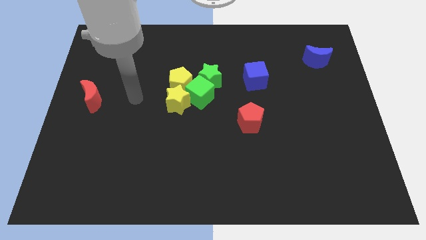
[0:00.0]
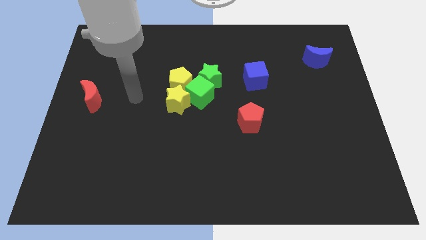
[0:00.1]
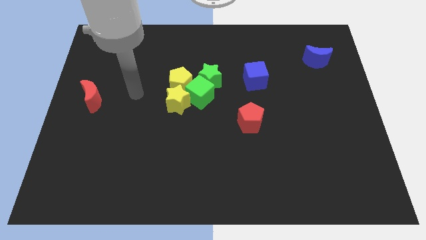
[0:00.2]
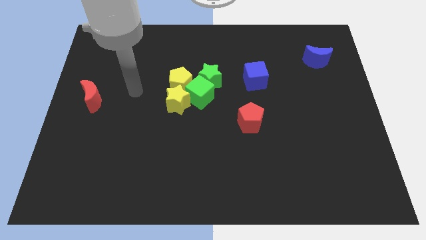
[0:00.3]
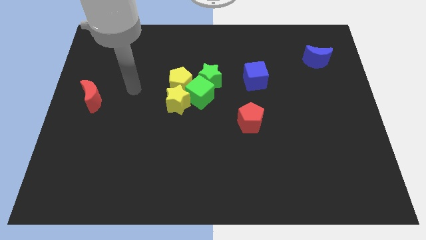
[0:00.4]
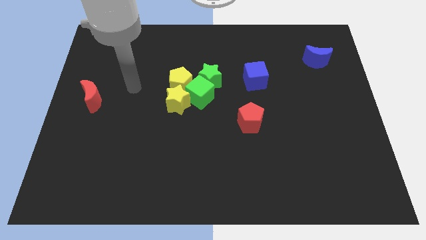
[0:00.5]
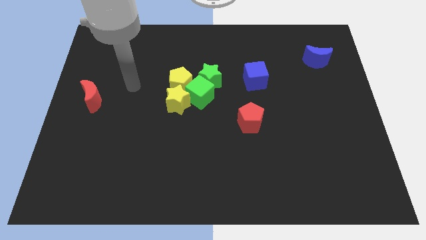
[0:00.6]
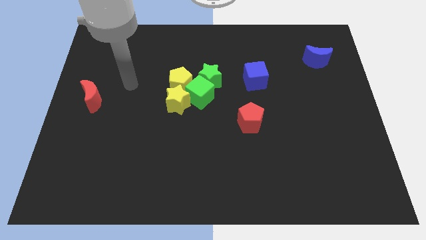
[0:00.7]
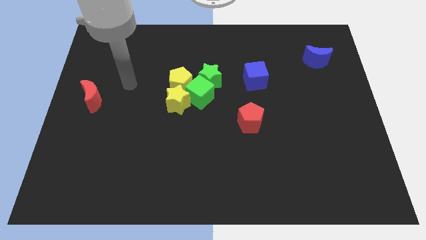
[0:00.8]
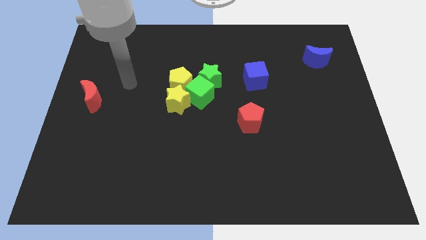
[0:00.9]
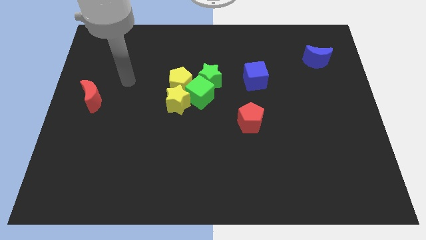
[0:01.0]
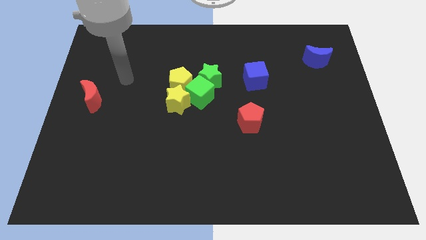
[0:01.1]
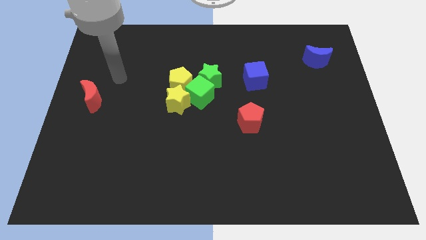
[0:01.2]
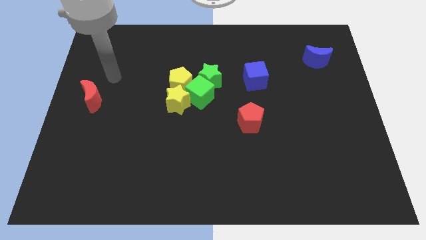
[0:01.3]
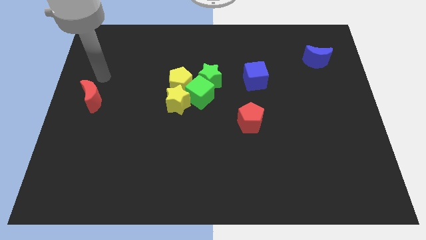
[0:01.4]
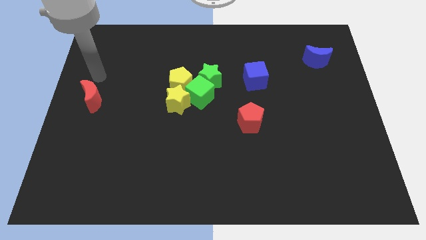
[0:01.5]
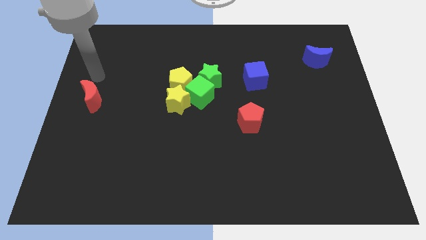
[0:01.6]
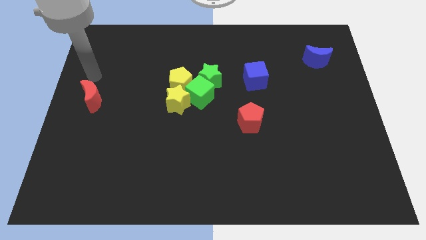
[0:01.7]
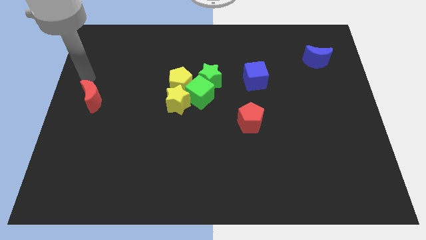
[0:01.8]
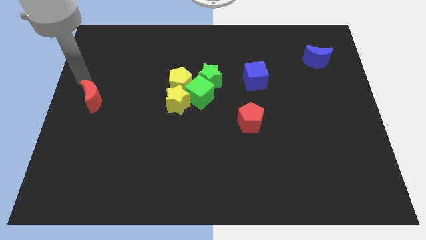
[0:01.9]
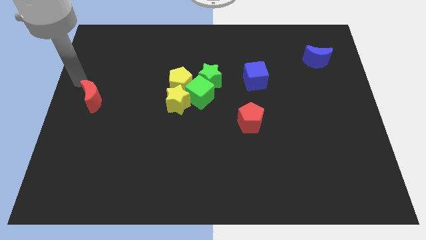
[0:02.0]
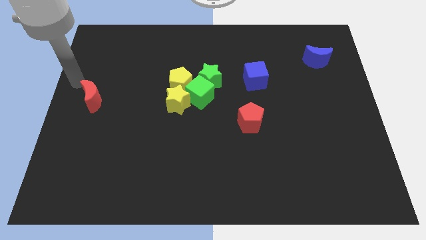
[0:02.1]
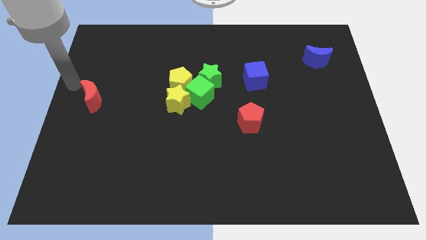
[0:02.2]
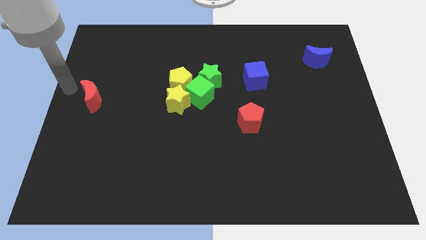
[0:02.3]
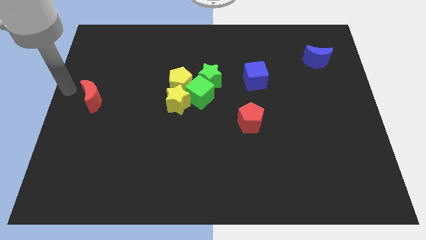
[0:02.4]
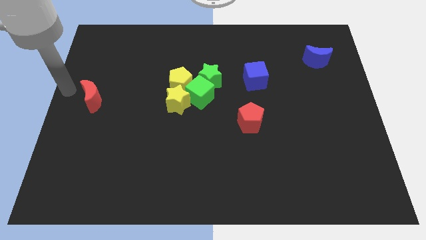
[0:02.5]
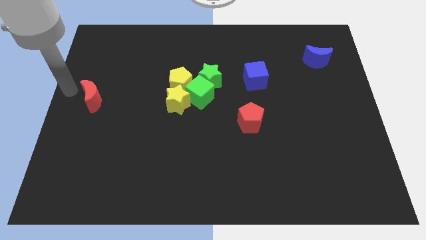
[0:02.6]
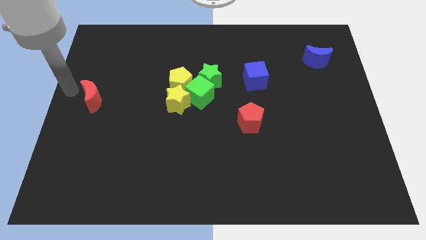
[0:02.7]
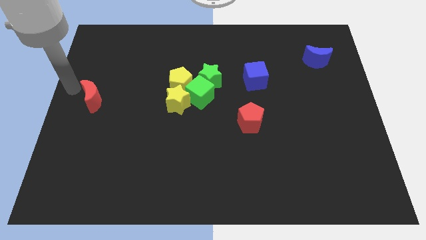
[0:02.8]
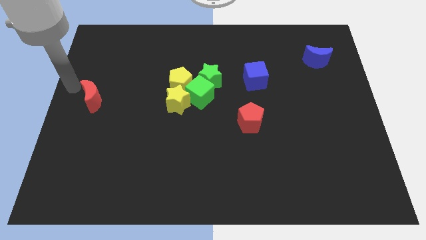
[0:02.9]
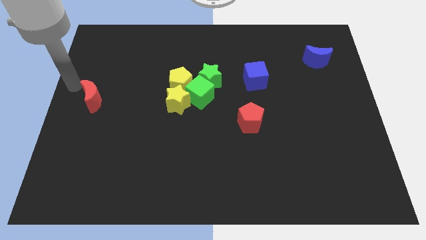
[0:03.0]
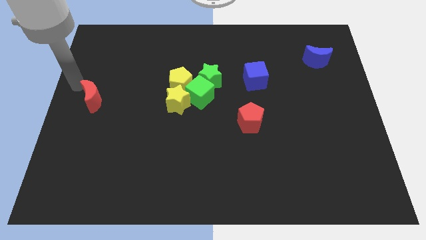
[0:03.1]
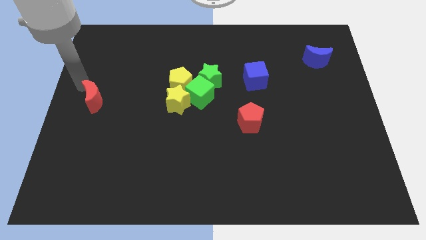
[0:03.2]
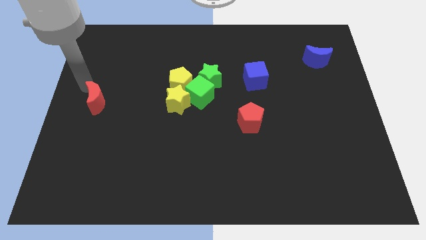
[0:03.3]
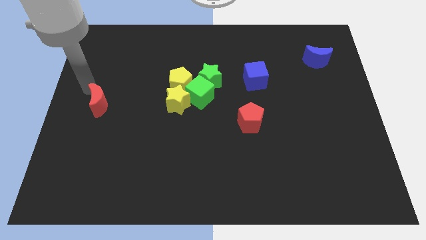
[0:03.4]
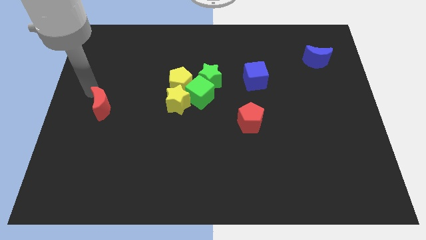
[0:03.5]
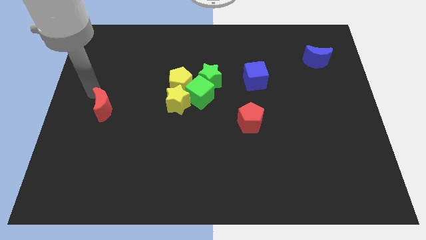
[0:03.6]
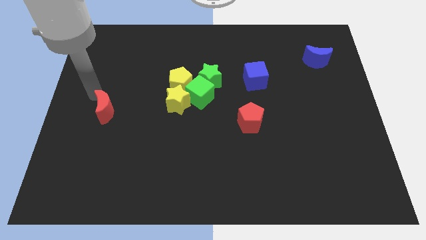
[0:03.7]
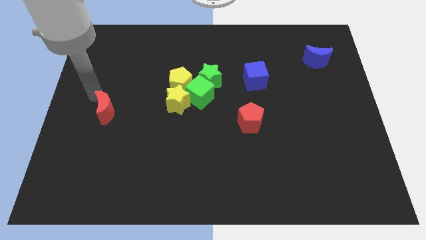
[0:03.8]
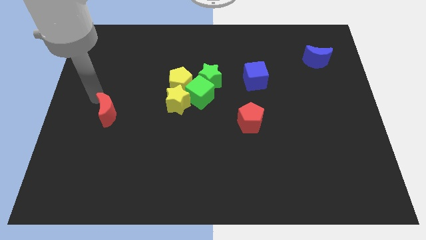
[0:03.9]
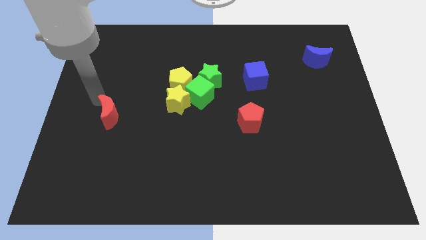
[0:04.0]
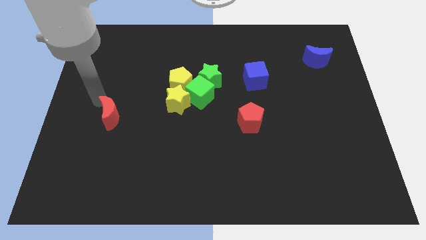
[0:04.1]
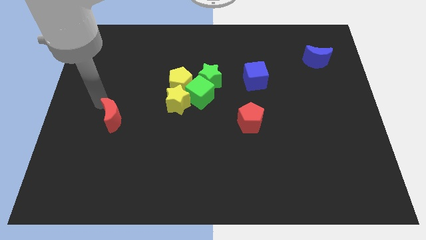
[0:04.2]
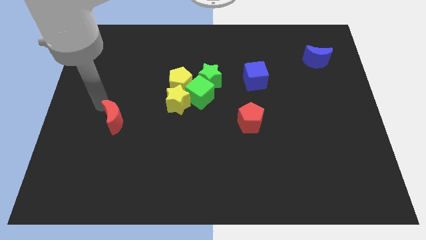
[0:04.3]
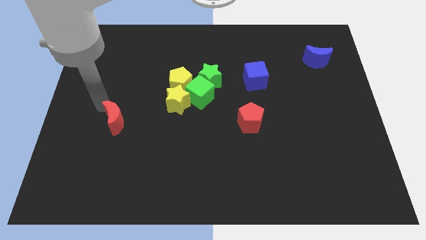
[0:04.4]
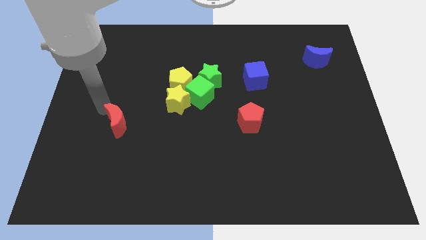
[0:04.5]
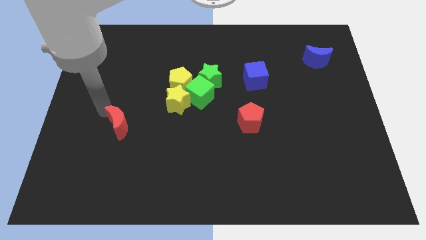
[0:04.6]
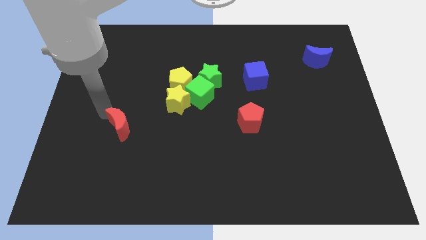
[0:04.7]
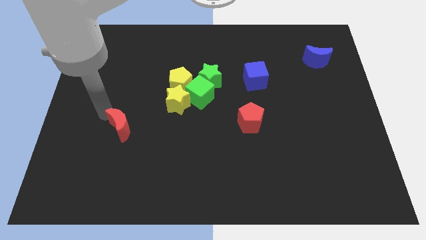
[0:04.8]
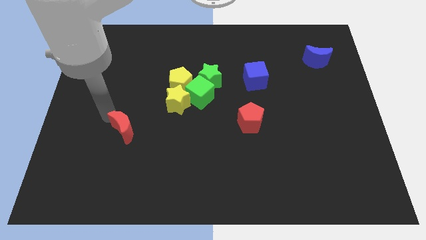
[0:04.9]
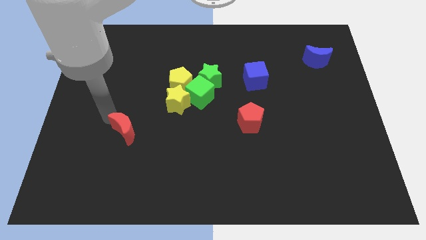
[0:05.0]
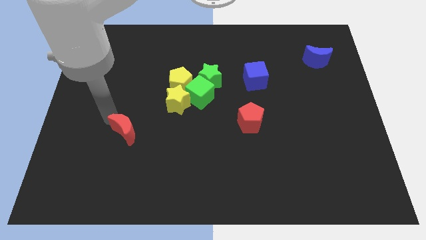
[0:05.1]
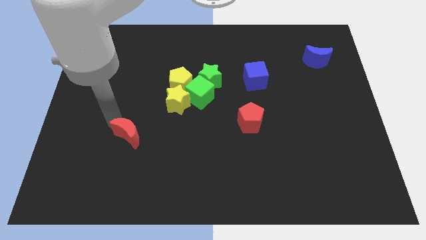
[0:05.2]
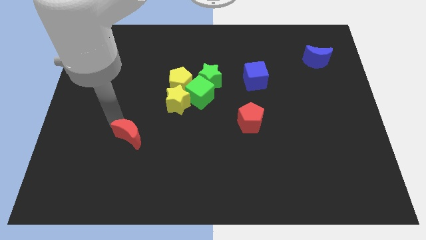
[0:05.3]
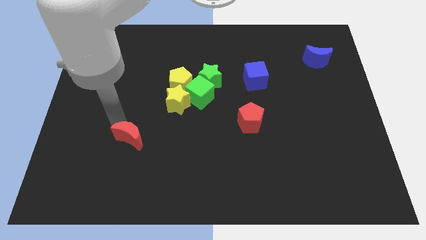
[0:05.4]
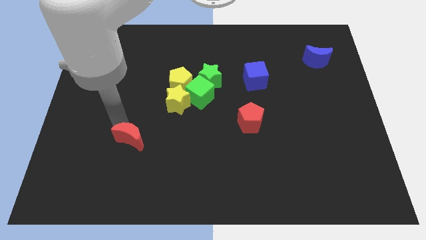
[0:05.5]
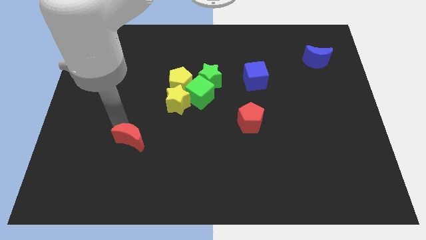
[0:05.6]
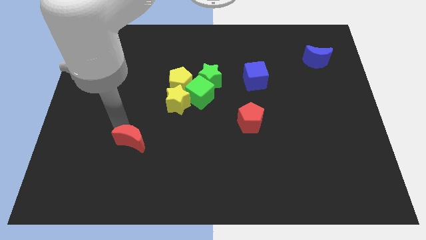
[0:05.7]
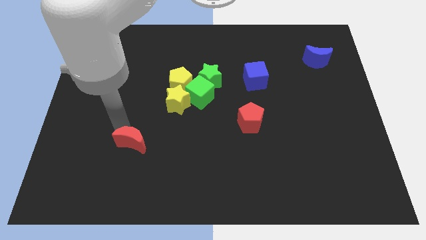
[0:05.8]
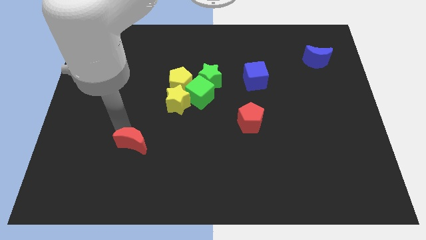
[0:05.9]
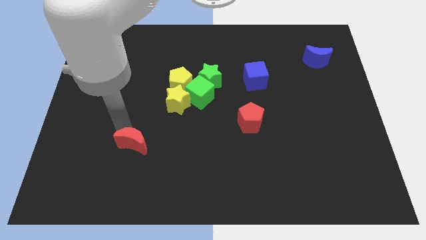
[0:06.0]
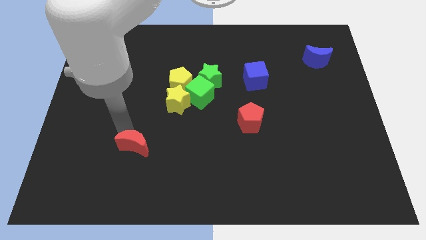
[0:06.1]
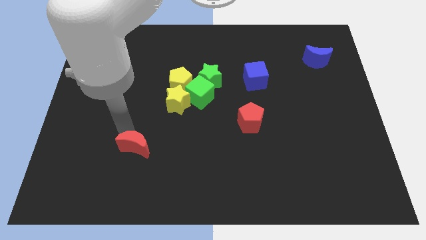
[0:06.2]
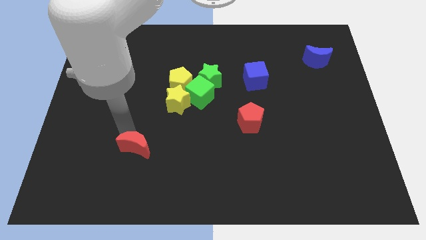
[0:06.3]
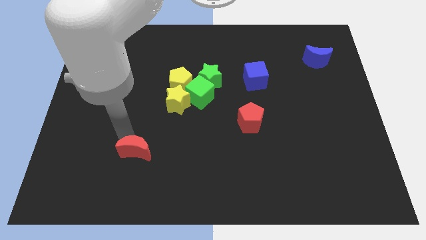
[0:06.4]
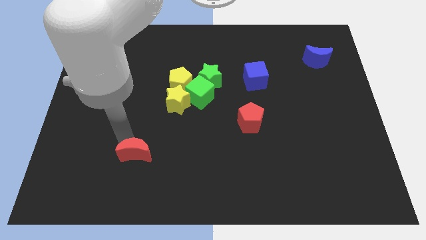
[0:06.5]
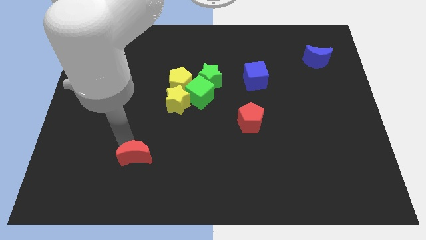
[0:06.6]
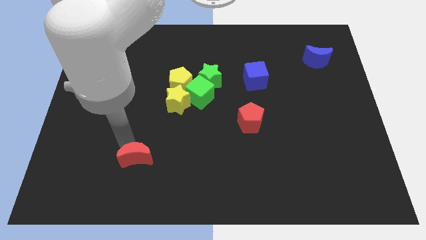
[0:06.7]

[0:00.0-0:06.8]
push the red crescent to the bottom left of the yellow star

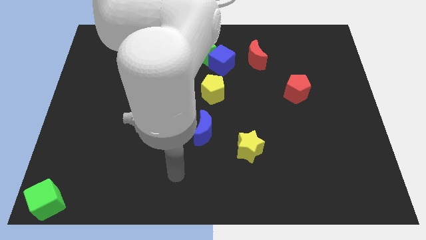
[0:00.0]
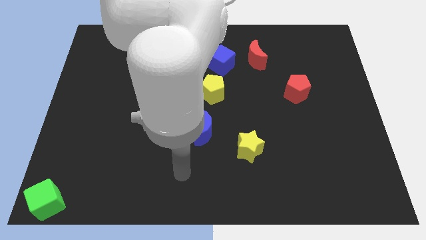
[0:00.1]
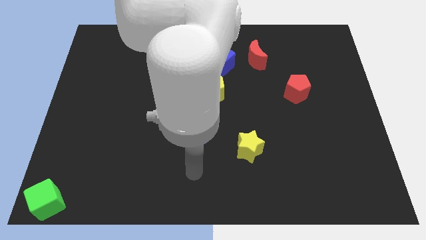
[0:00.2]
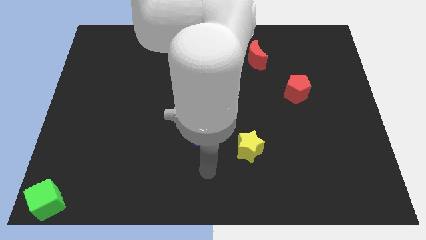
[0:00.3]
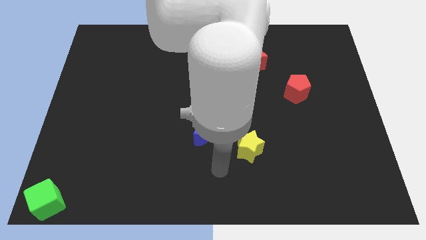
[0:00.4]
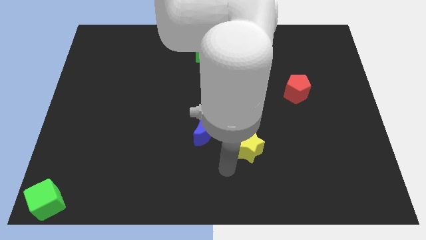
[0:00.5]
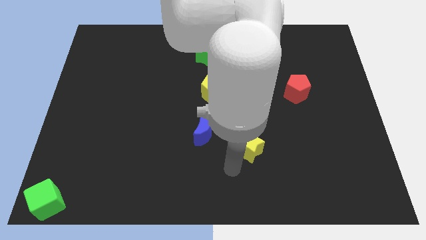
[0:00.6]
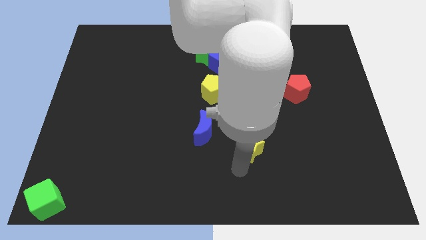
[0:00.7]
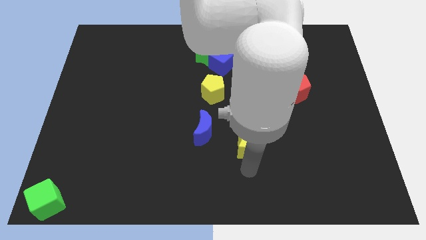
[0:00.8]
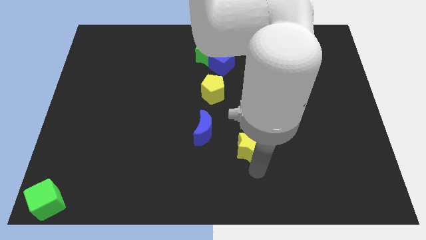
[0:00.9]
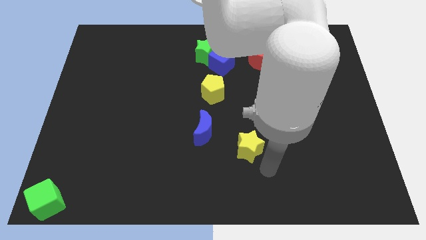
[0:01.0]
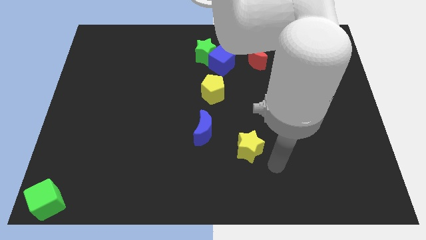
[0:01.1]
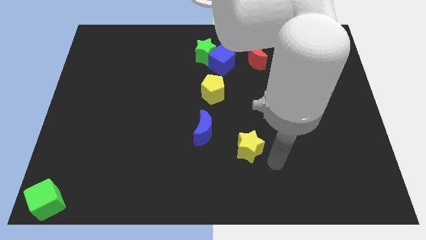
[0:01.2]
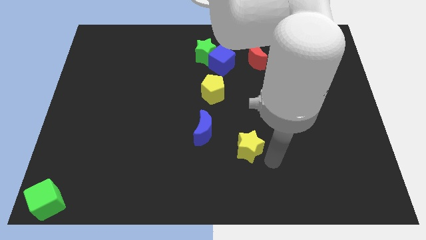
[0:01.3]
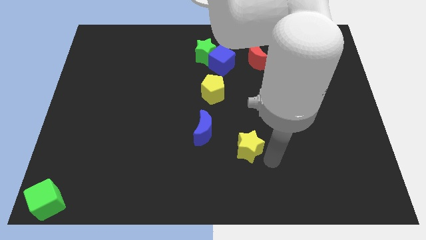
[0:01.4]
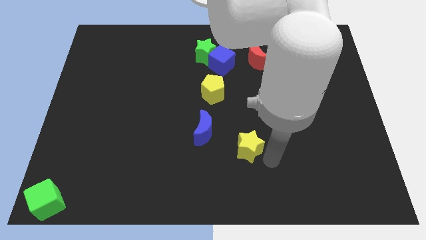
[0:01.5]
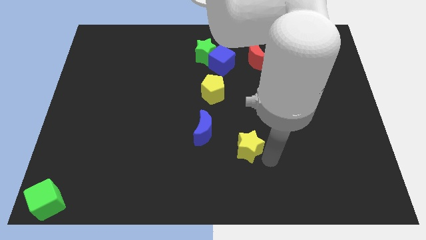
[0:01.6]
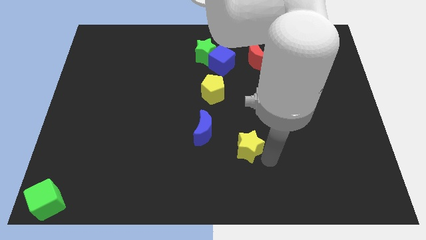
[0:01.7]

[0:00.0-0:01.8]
move your arm to the right of the yellow star

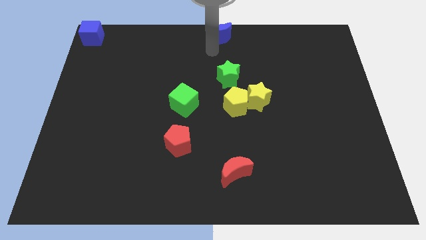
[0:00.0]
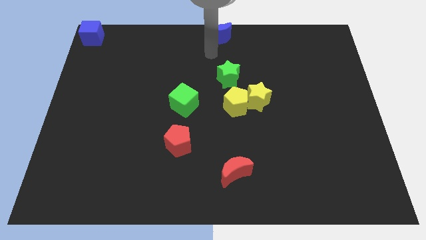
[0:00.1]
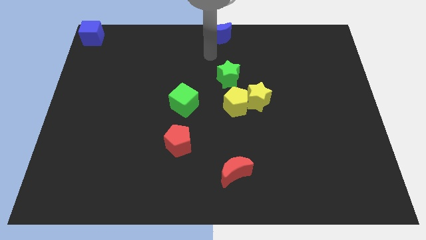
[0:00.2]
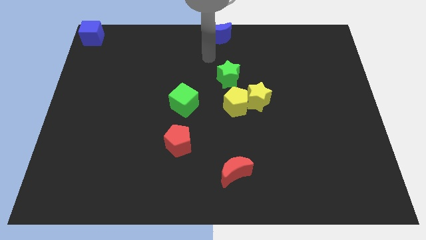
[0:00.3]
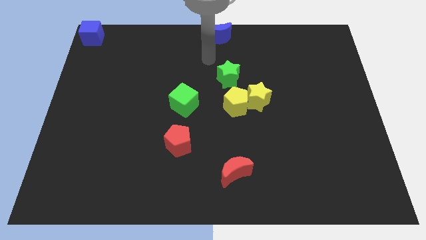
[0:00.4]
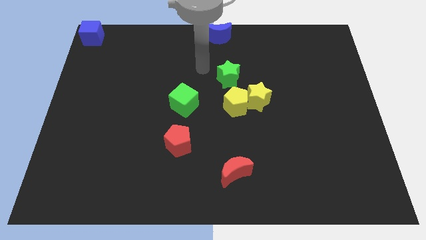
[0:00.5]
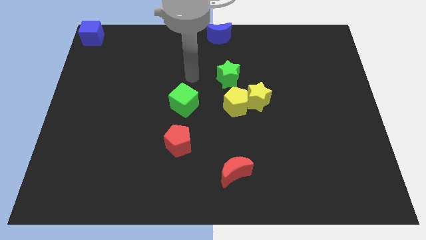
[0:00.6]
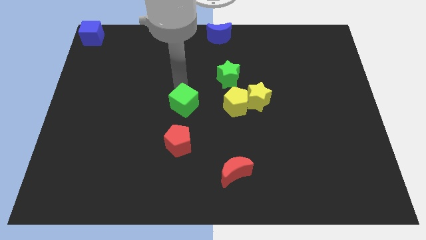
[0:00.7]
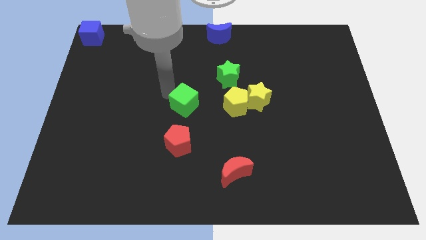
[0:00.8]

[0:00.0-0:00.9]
move your arm away from blue moon
